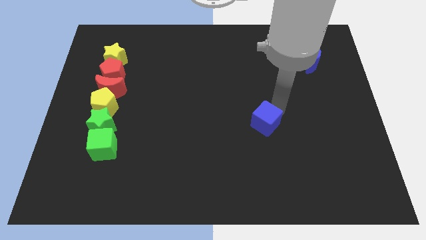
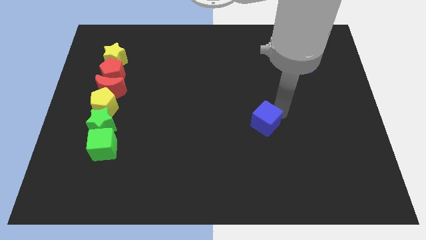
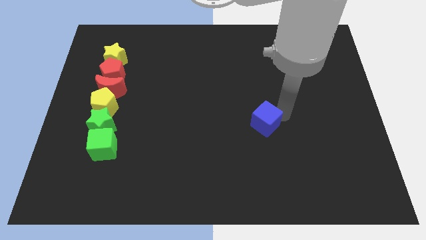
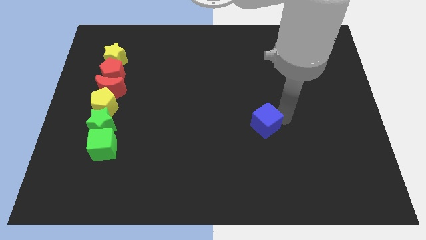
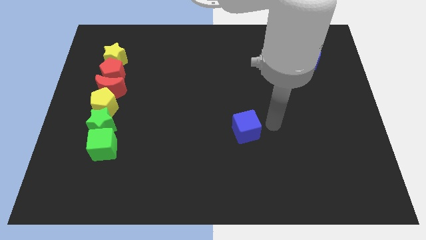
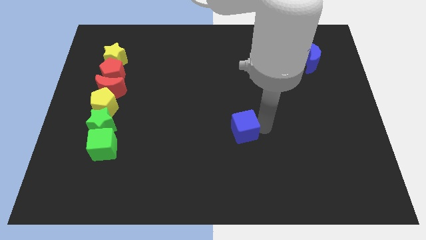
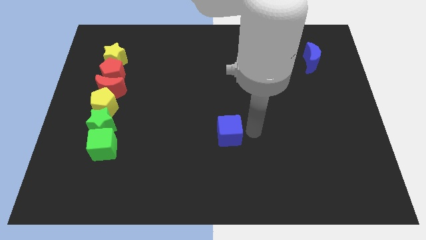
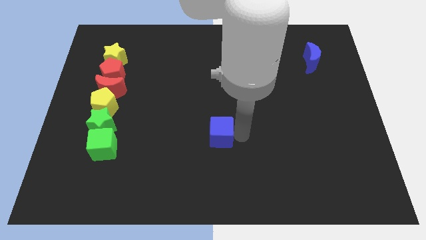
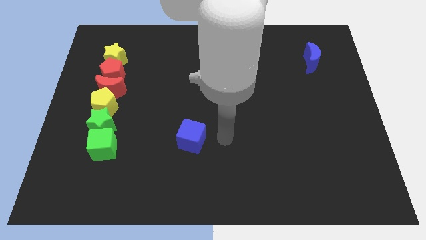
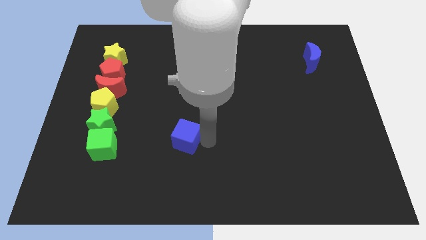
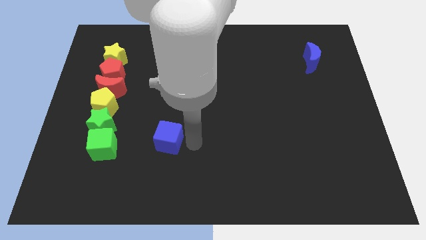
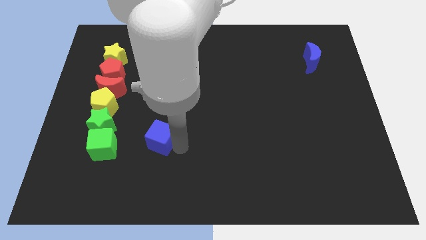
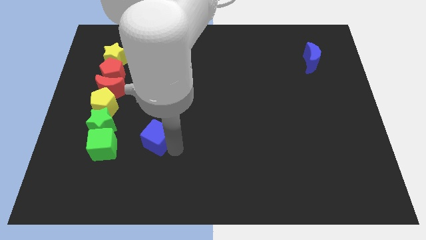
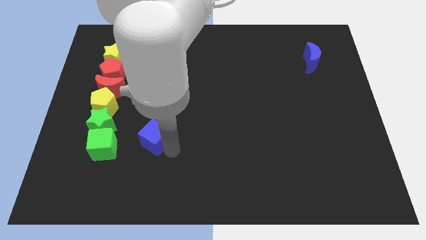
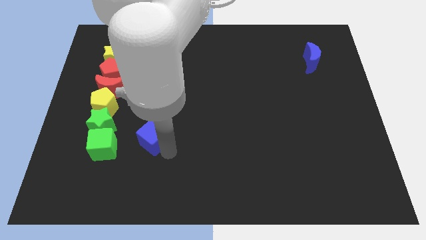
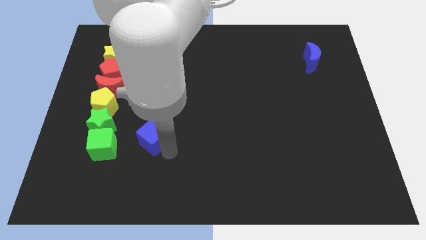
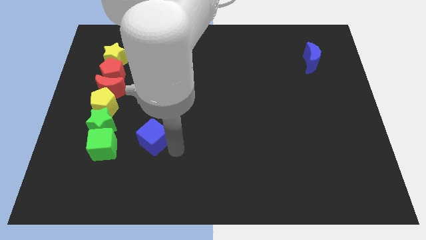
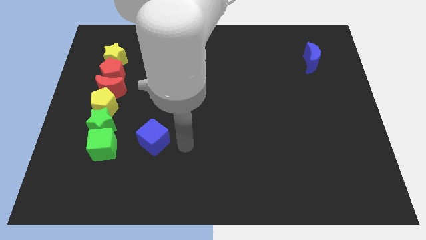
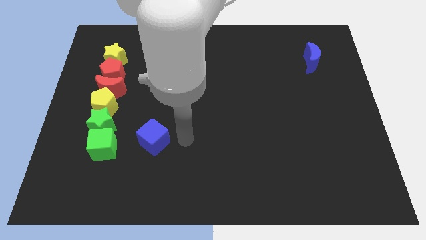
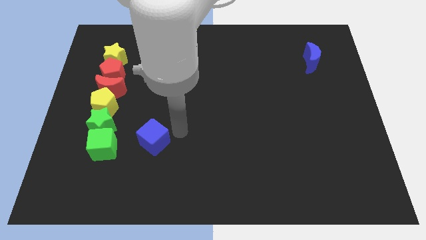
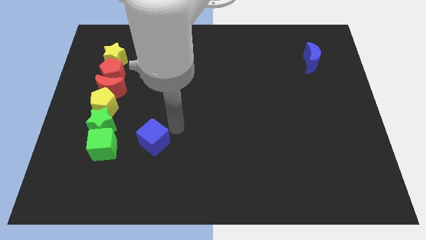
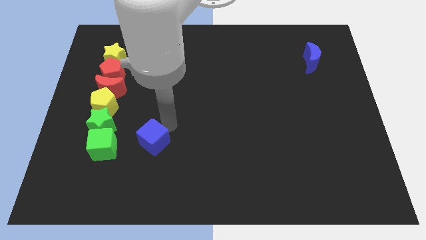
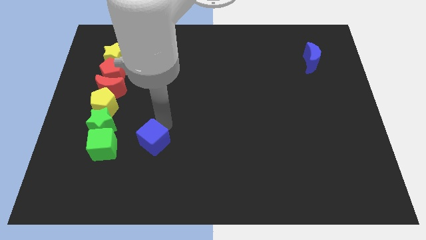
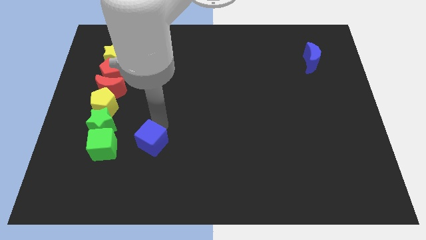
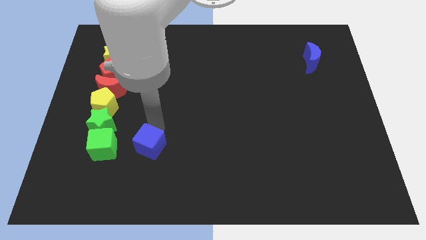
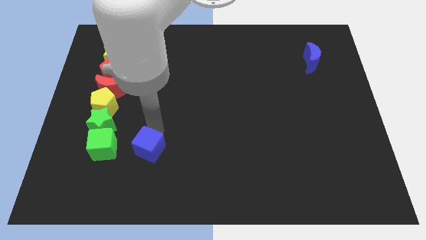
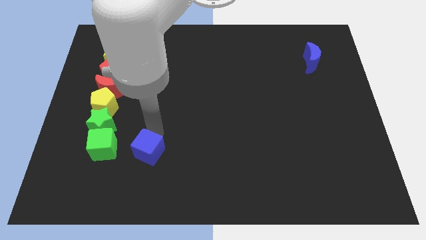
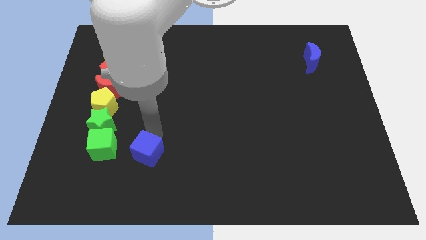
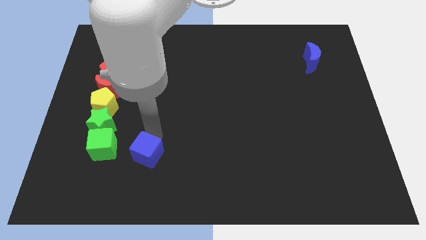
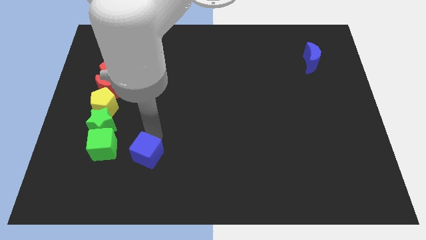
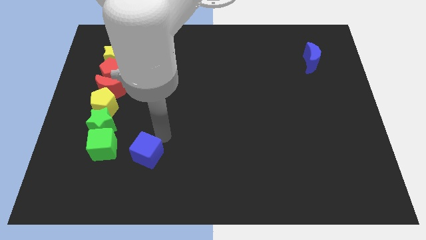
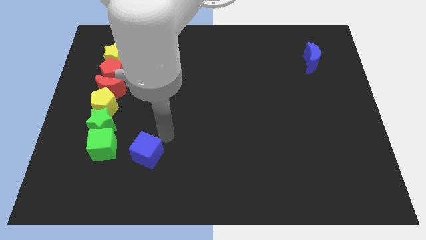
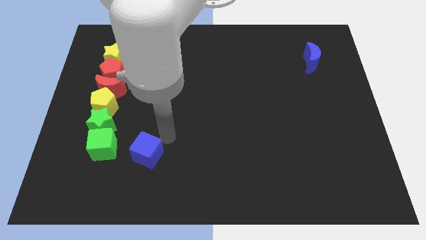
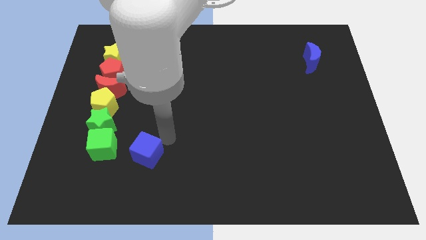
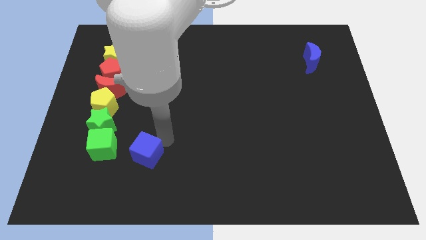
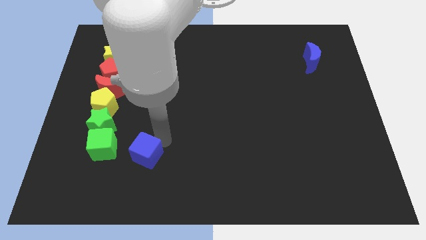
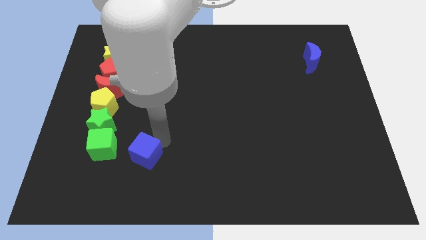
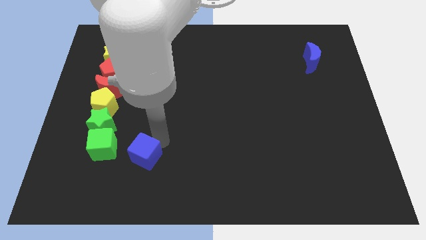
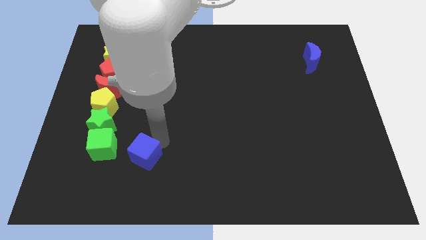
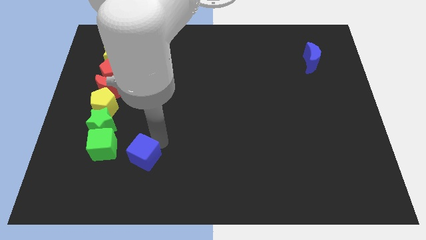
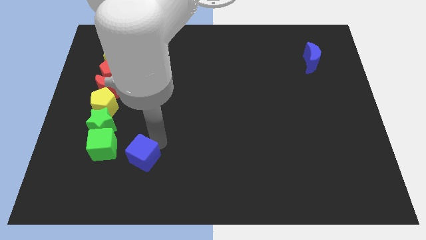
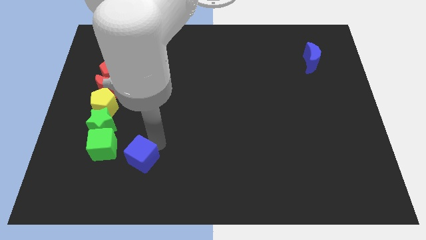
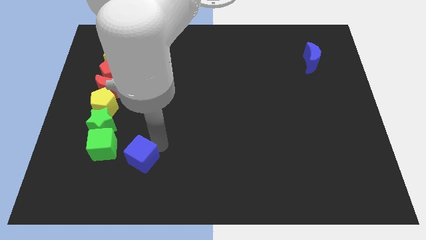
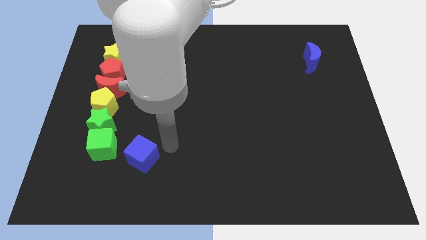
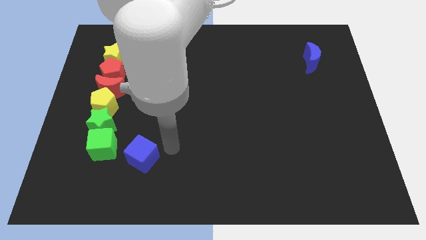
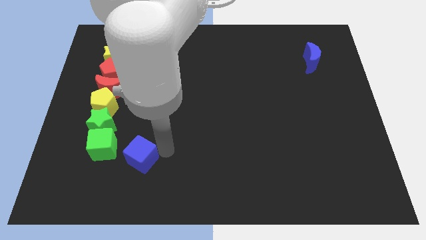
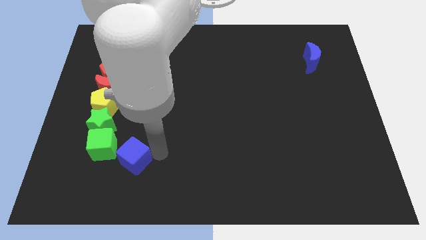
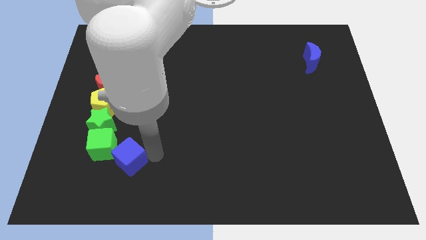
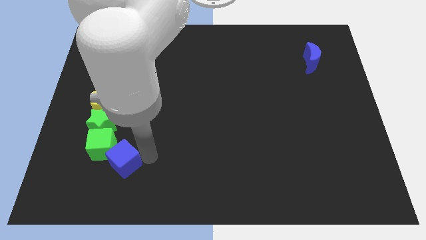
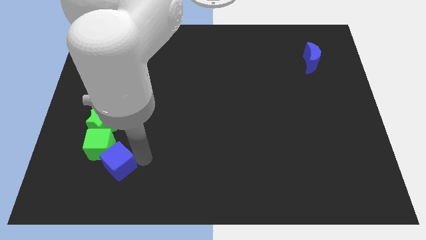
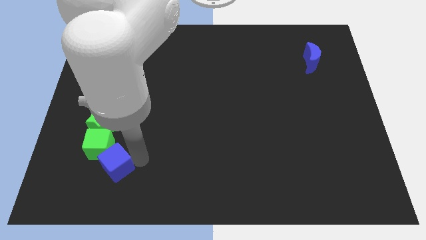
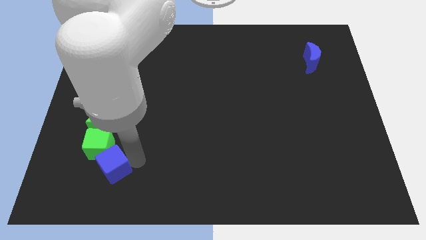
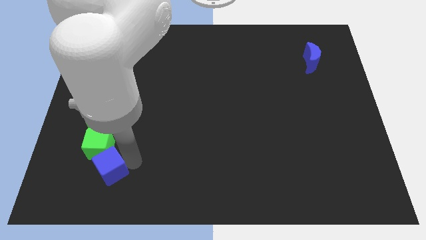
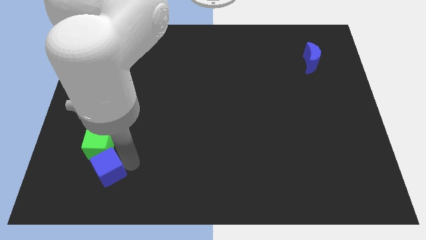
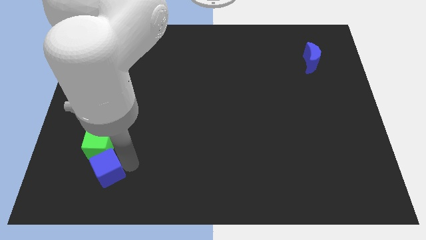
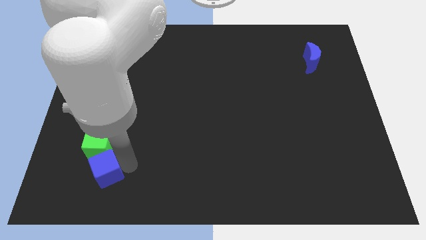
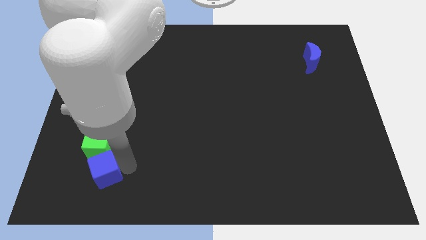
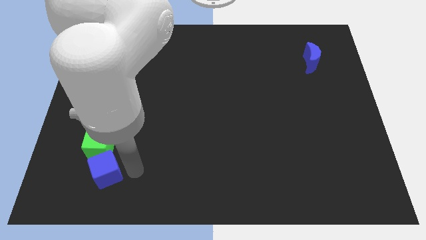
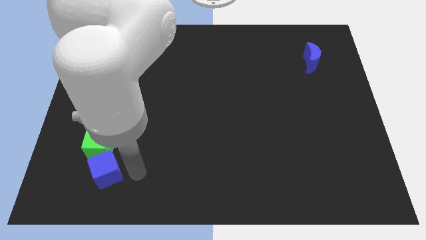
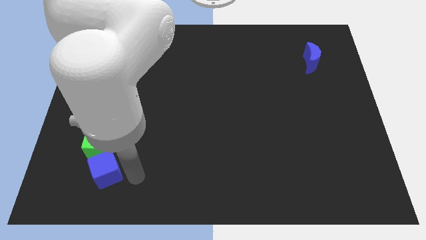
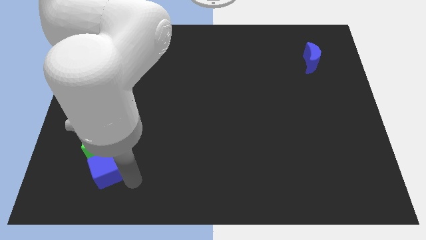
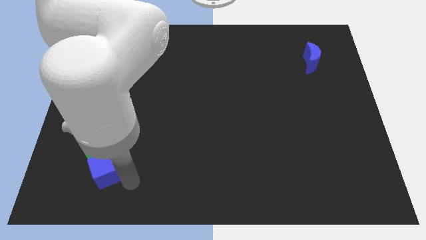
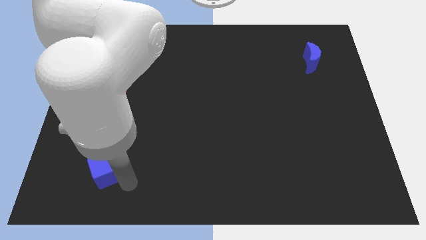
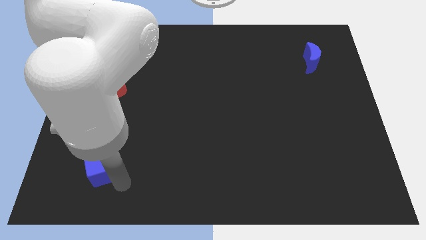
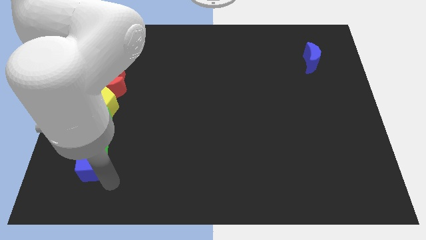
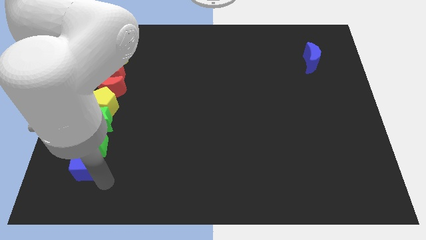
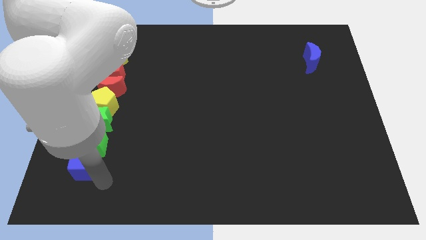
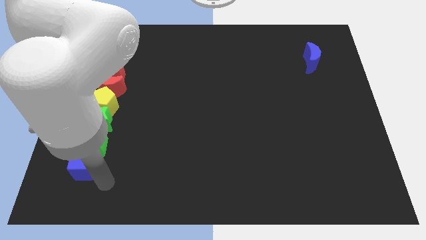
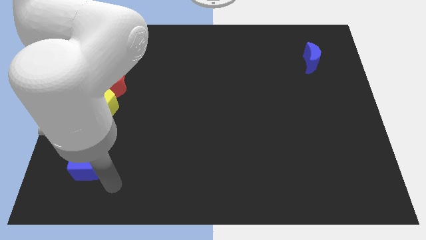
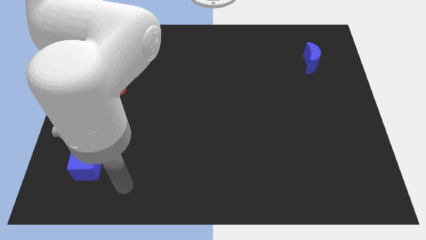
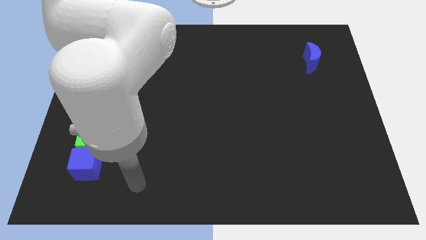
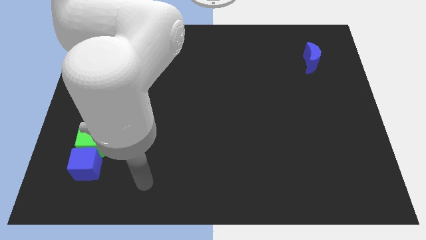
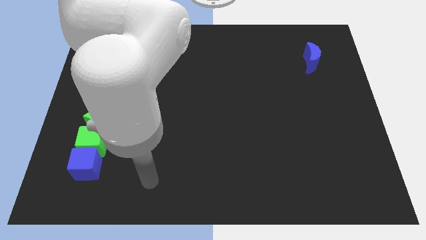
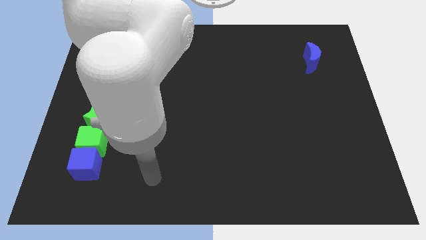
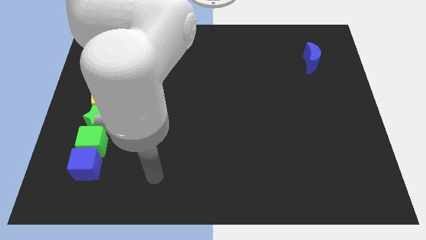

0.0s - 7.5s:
push the blue cube and place it below the green cube

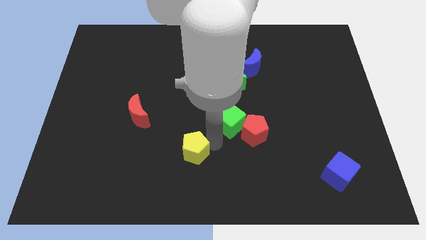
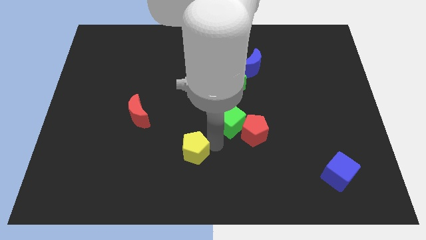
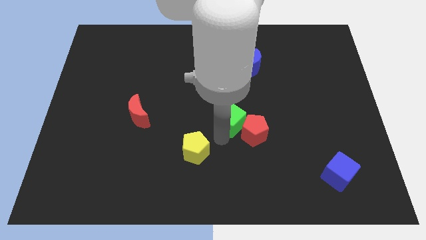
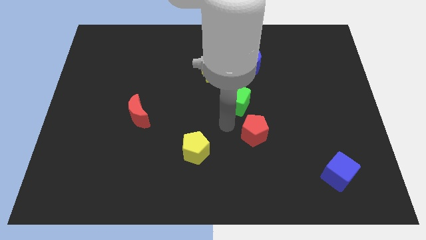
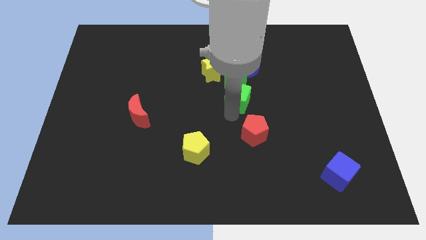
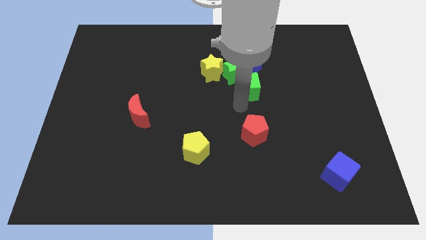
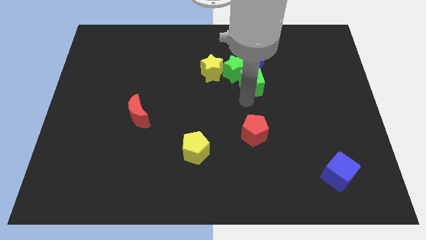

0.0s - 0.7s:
place green cube above red pentagon

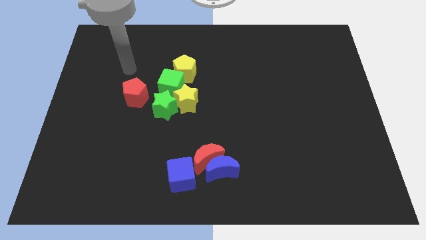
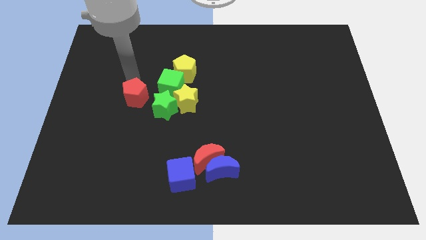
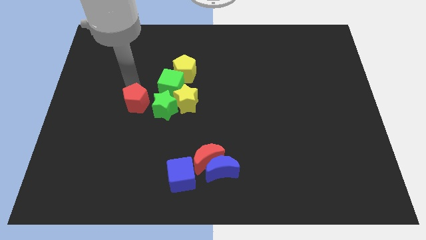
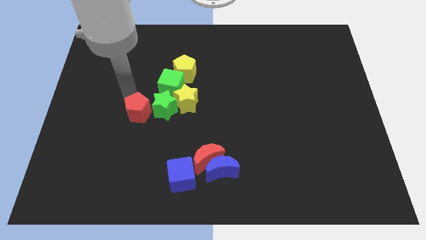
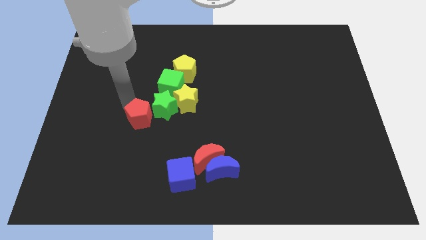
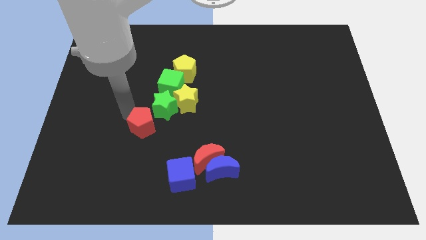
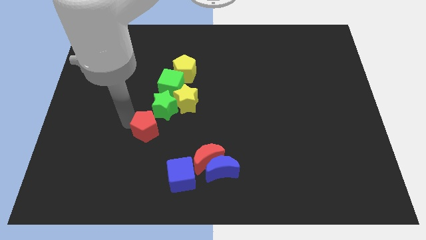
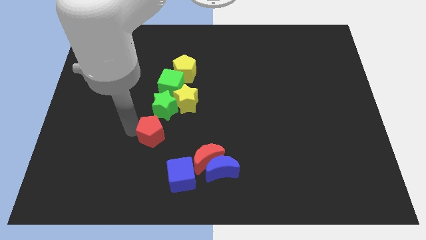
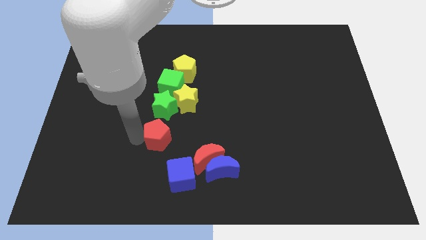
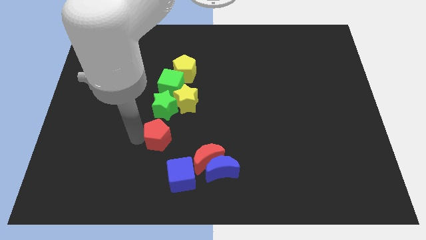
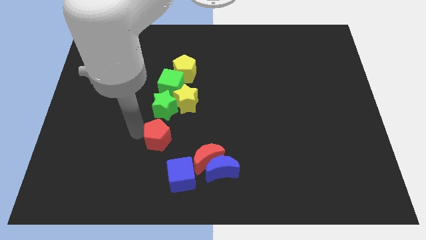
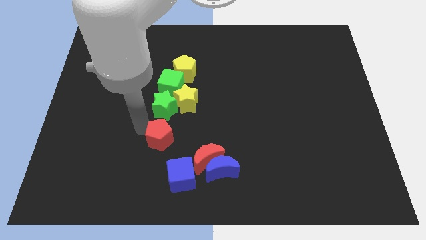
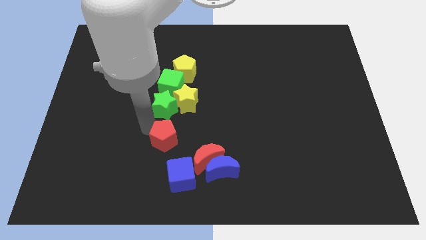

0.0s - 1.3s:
put the red pentagon underneath the green star
